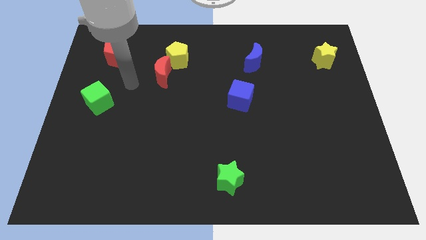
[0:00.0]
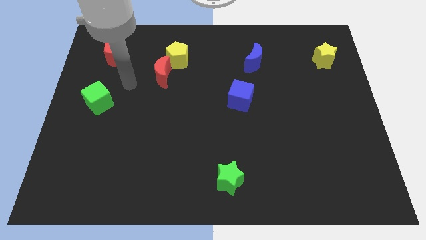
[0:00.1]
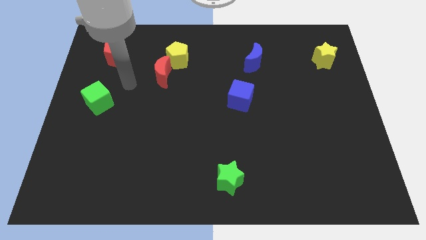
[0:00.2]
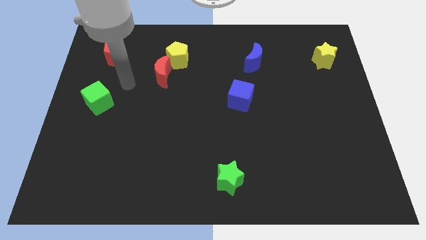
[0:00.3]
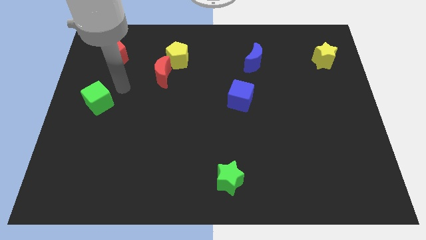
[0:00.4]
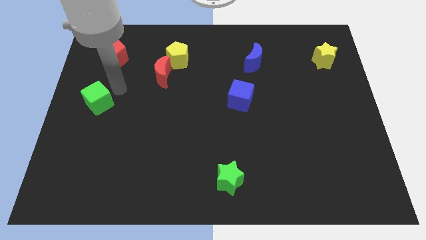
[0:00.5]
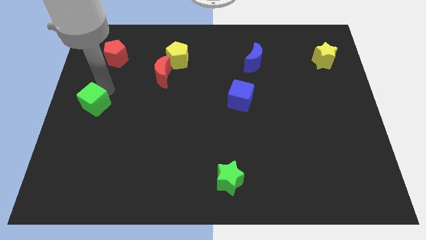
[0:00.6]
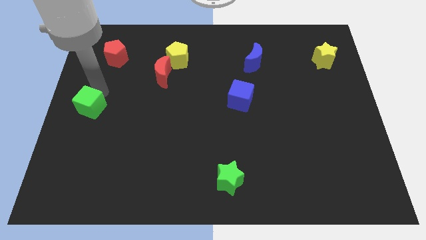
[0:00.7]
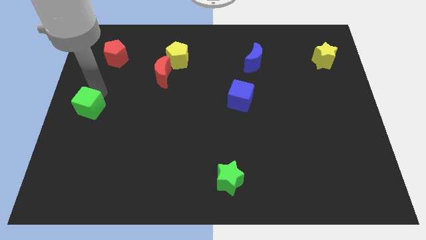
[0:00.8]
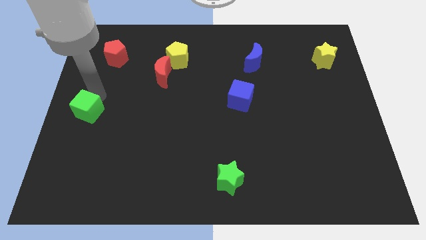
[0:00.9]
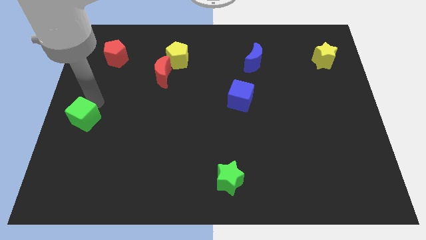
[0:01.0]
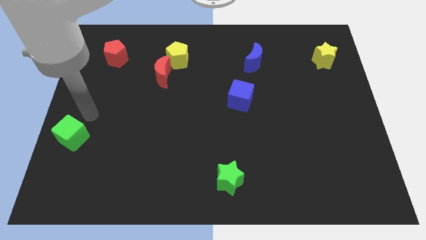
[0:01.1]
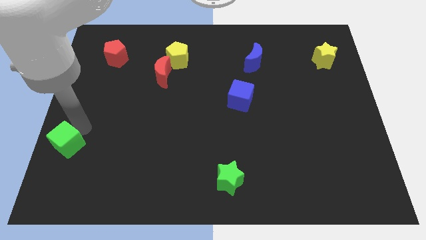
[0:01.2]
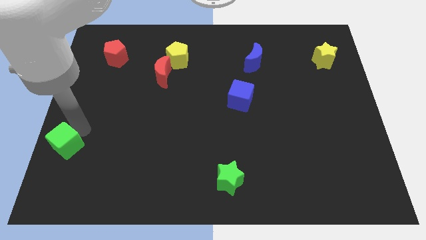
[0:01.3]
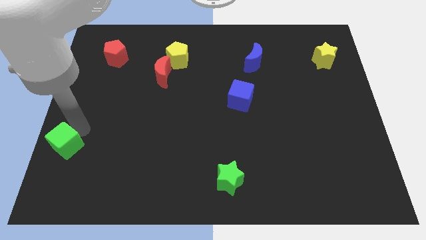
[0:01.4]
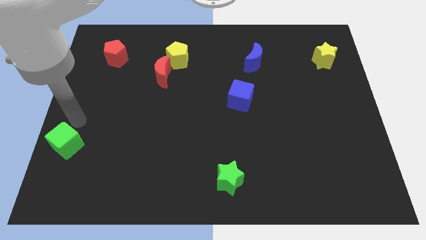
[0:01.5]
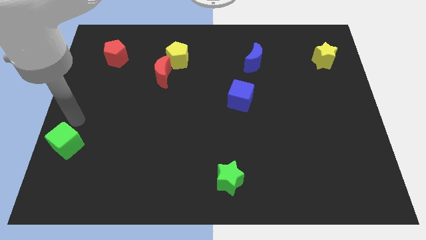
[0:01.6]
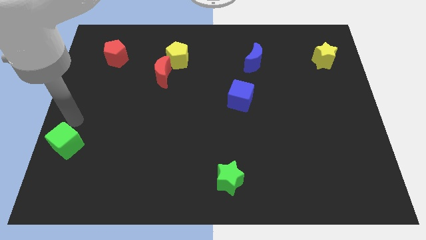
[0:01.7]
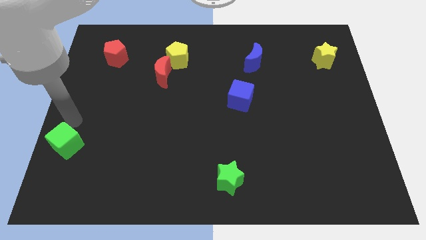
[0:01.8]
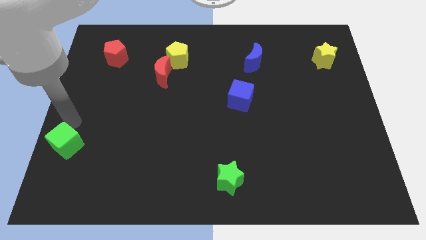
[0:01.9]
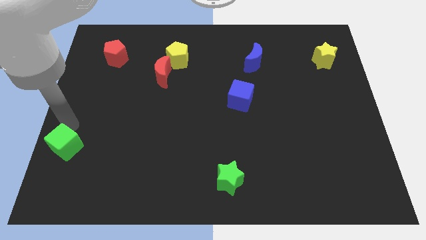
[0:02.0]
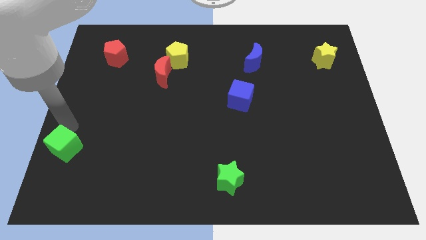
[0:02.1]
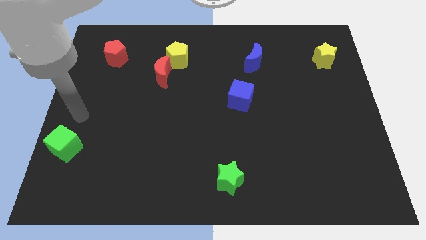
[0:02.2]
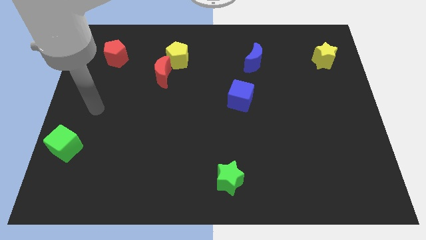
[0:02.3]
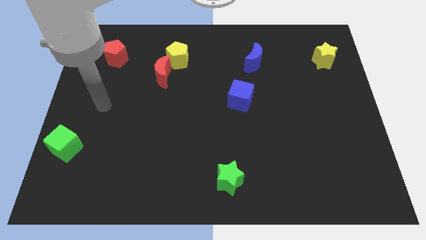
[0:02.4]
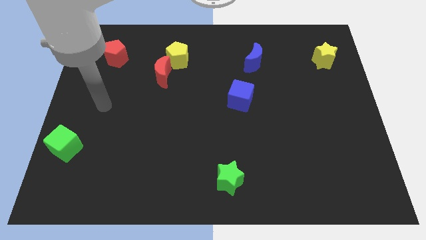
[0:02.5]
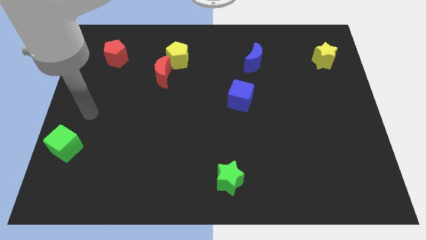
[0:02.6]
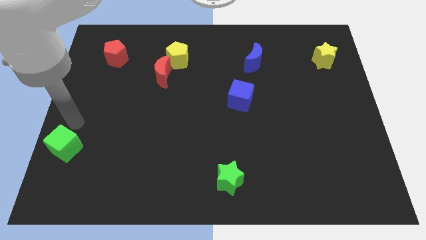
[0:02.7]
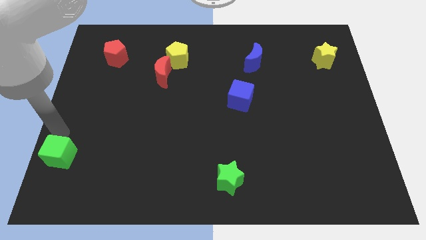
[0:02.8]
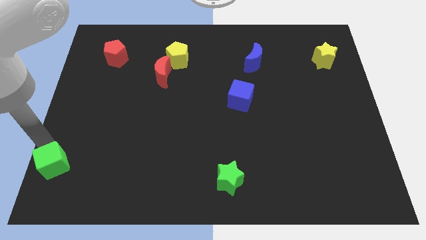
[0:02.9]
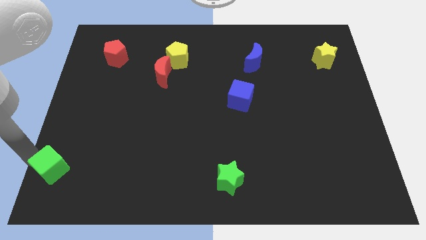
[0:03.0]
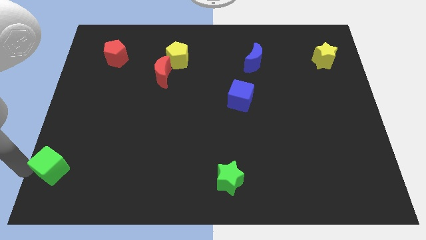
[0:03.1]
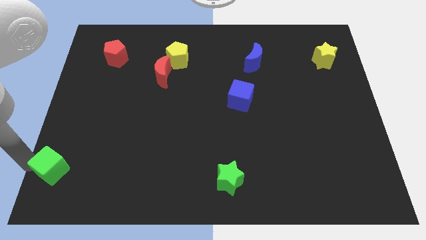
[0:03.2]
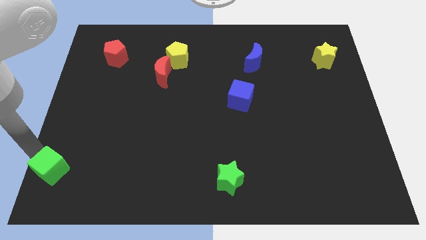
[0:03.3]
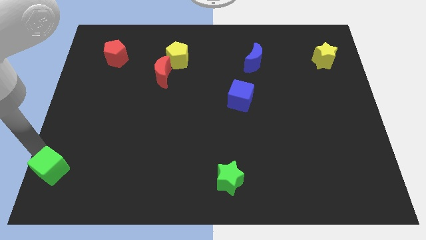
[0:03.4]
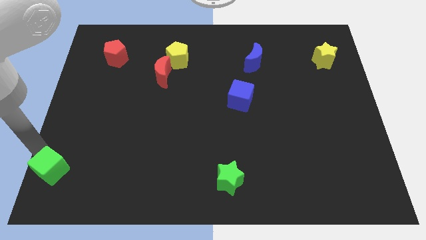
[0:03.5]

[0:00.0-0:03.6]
move the green cube to the left side of the green star

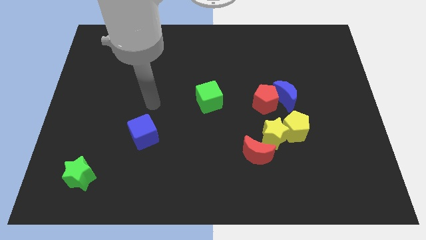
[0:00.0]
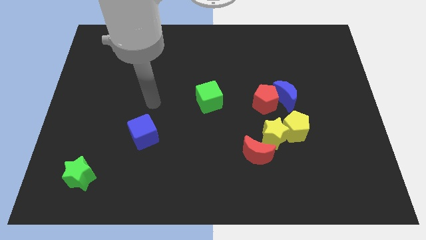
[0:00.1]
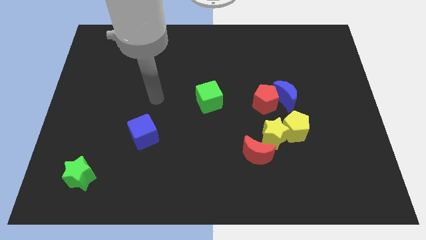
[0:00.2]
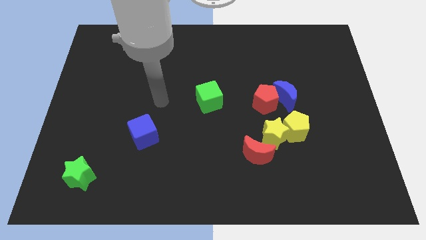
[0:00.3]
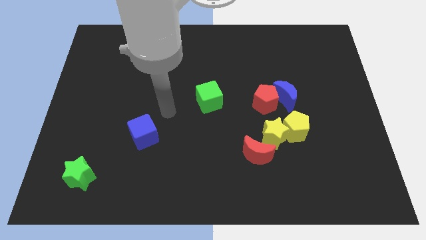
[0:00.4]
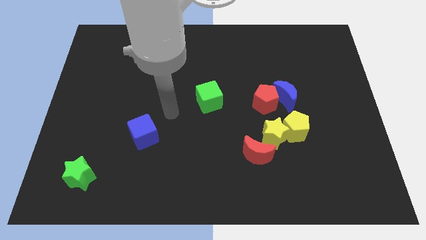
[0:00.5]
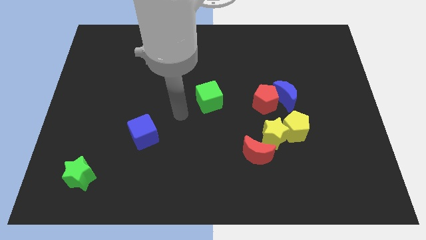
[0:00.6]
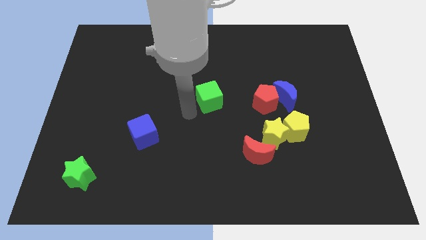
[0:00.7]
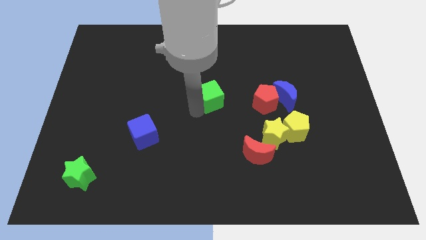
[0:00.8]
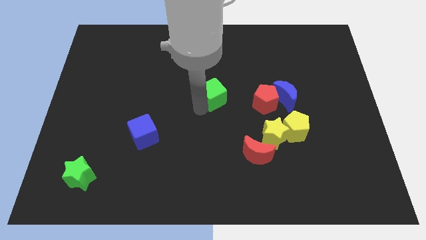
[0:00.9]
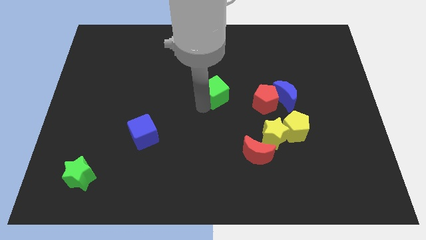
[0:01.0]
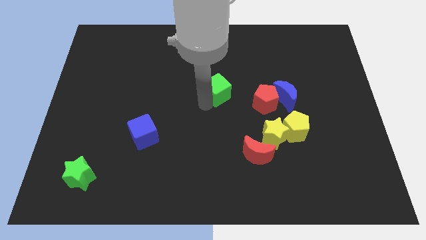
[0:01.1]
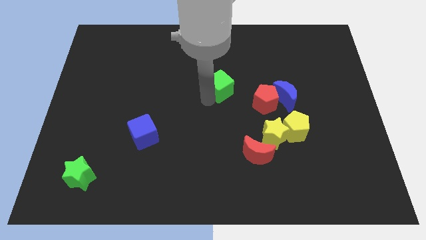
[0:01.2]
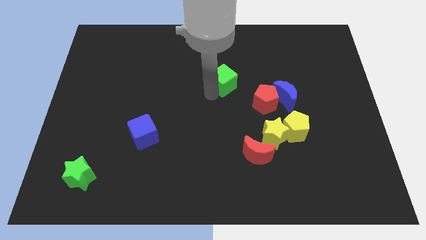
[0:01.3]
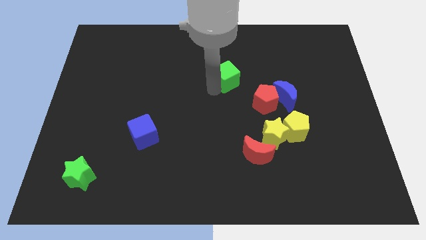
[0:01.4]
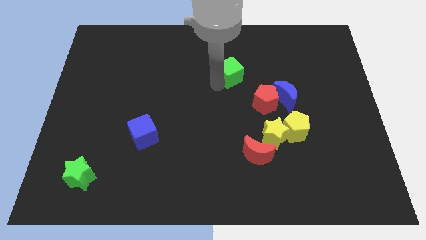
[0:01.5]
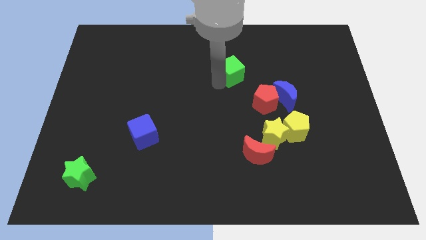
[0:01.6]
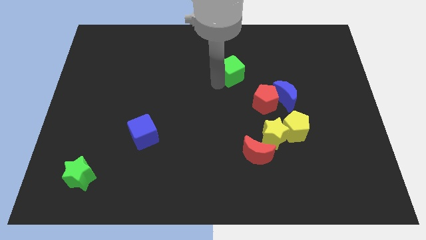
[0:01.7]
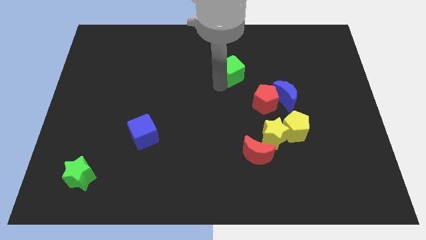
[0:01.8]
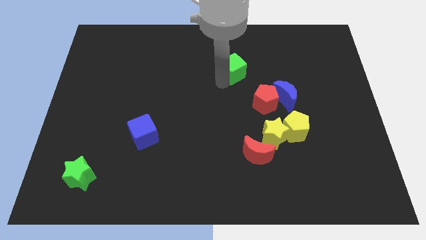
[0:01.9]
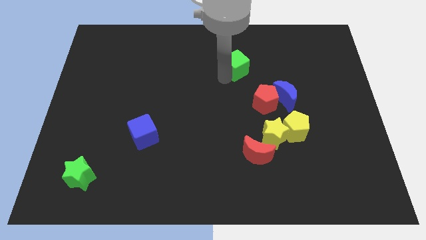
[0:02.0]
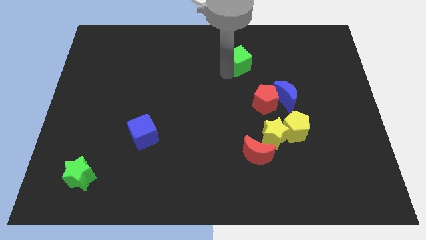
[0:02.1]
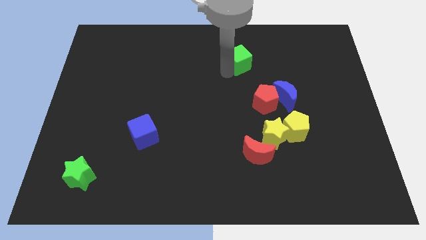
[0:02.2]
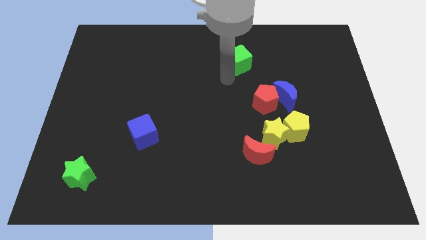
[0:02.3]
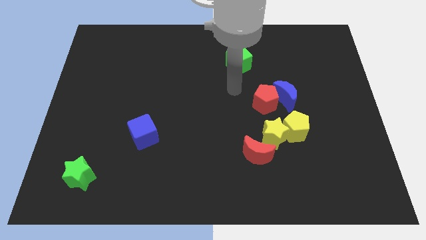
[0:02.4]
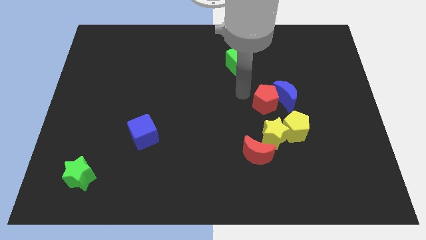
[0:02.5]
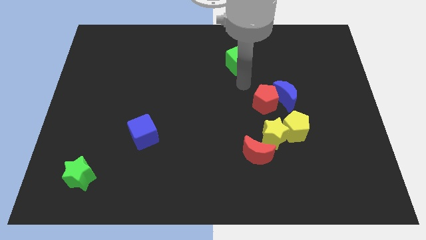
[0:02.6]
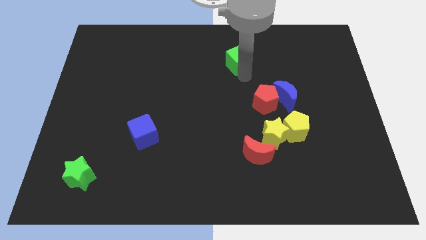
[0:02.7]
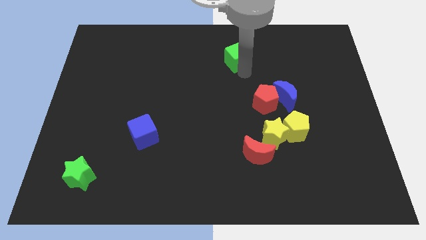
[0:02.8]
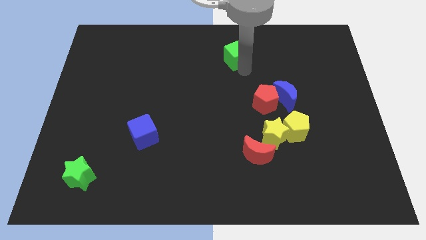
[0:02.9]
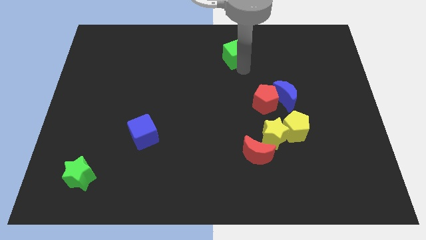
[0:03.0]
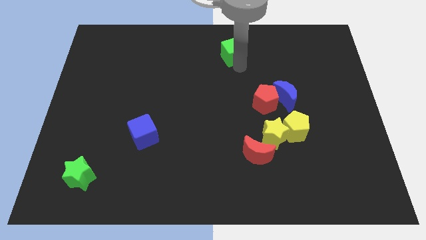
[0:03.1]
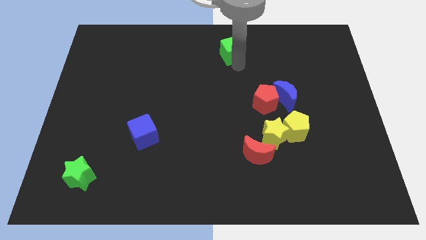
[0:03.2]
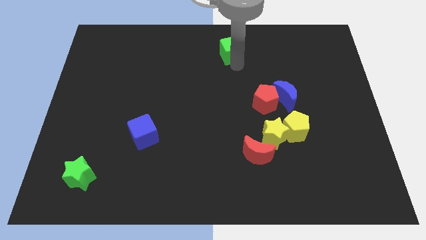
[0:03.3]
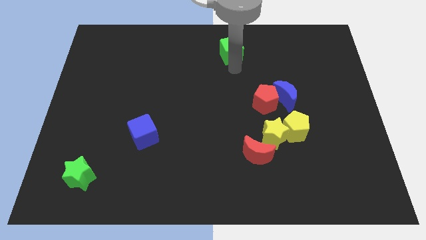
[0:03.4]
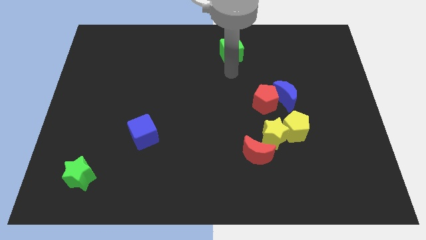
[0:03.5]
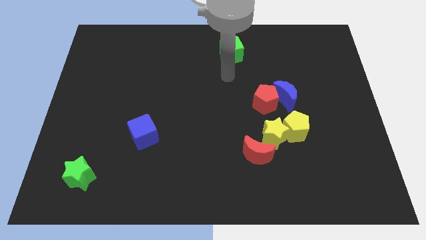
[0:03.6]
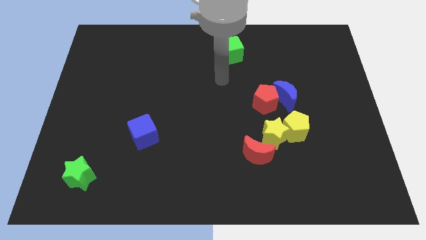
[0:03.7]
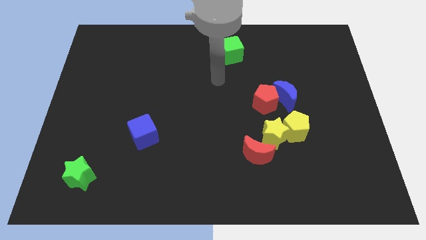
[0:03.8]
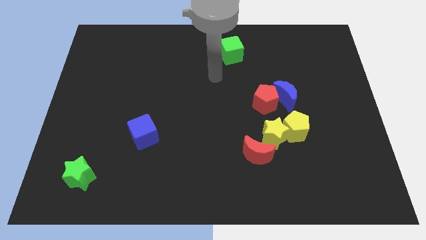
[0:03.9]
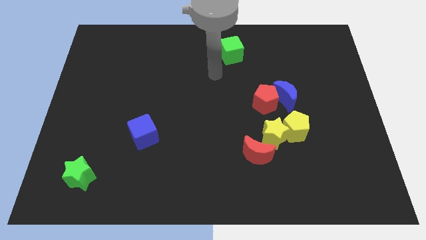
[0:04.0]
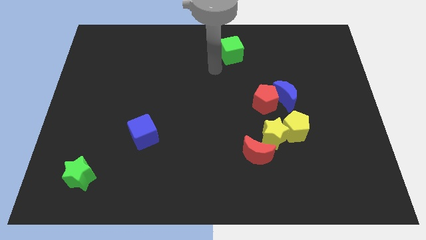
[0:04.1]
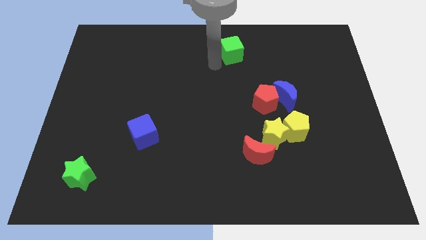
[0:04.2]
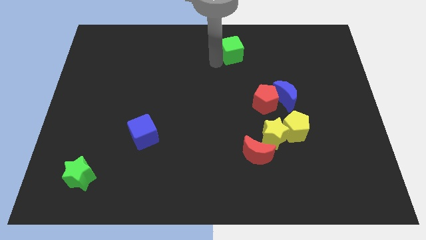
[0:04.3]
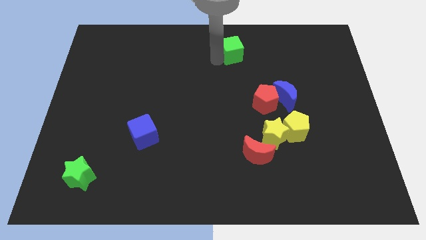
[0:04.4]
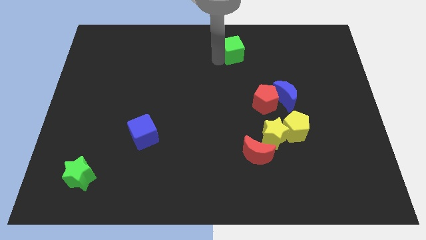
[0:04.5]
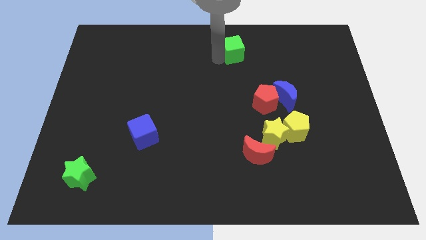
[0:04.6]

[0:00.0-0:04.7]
push the green cube towards the top center of the board

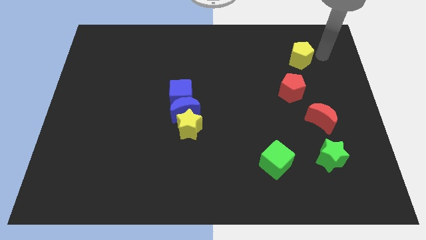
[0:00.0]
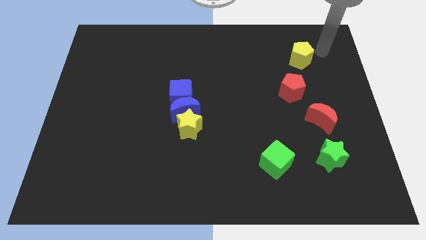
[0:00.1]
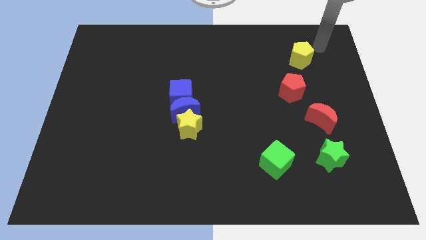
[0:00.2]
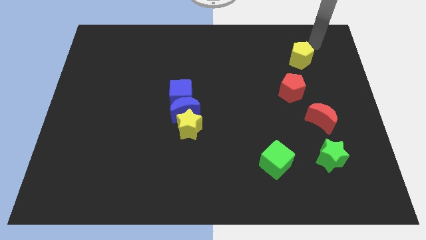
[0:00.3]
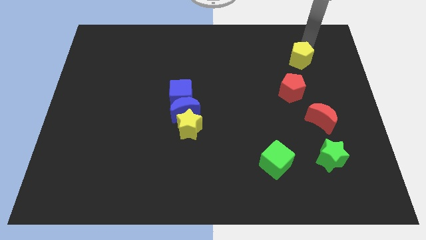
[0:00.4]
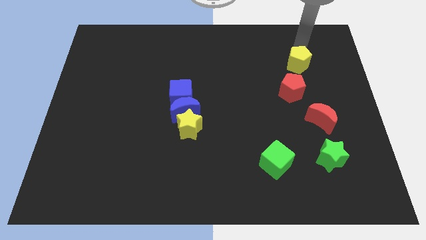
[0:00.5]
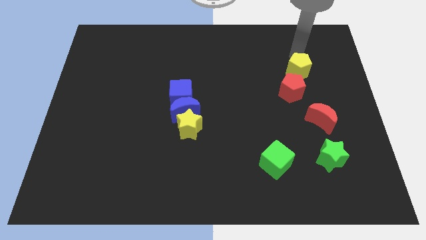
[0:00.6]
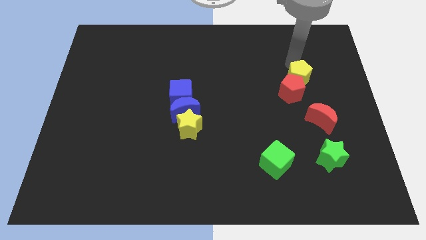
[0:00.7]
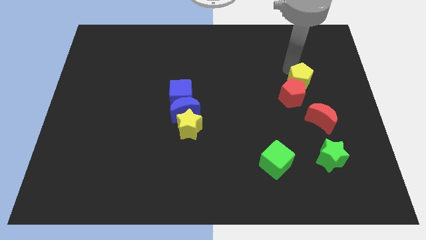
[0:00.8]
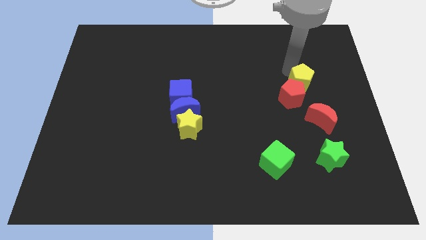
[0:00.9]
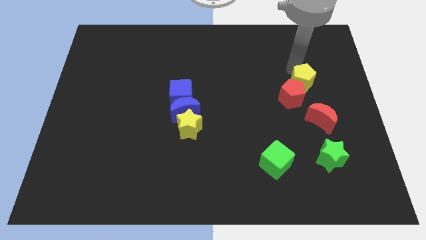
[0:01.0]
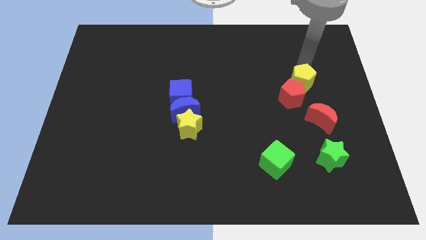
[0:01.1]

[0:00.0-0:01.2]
push yellow pentagon into red pentagon
